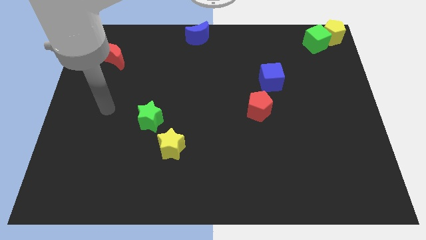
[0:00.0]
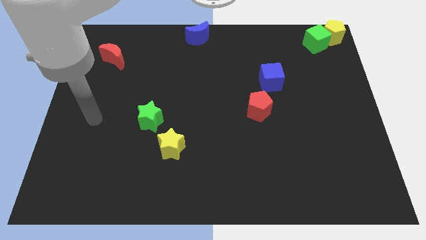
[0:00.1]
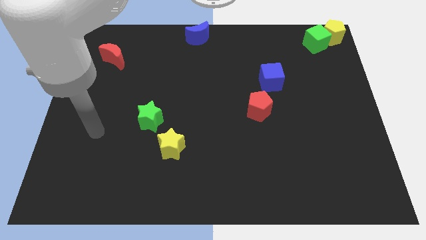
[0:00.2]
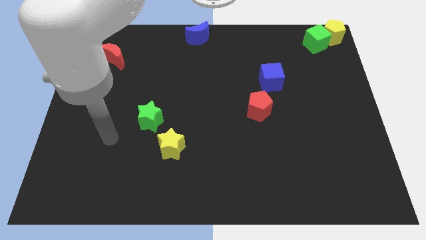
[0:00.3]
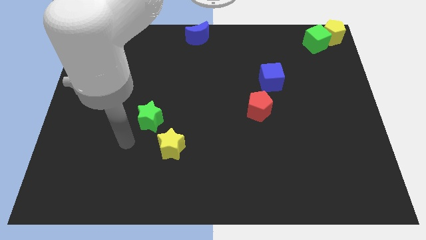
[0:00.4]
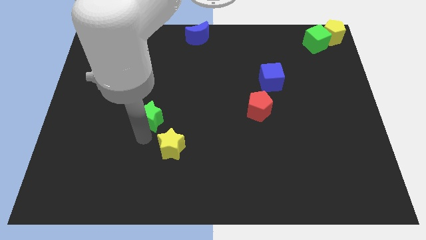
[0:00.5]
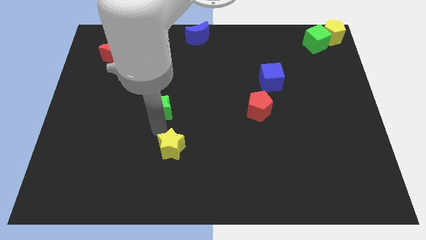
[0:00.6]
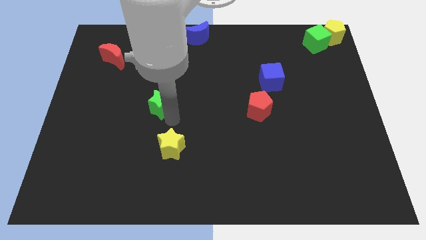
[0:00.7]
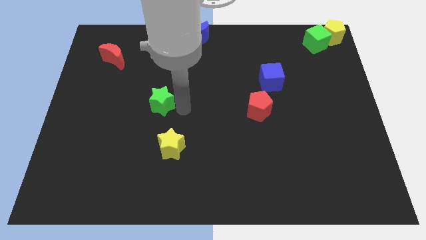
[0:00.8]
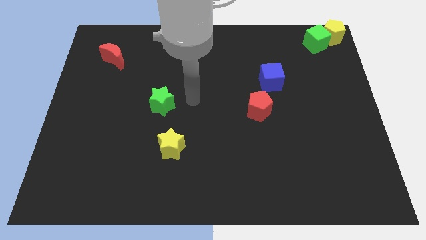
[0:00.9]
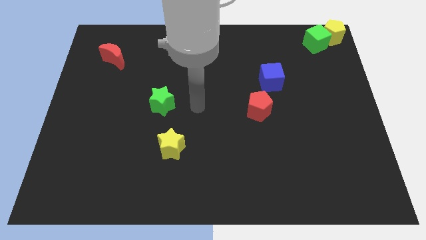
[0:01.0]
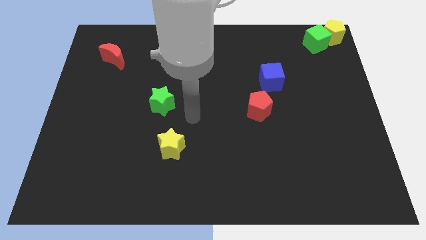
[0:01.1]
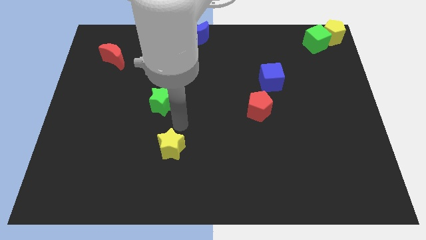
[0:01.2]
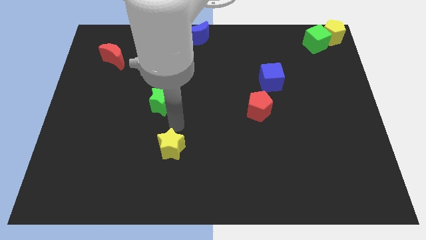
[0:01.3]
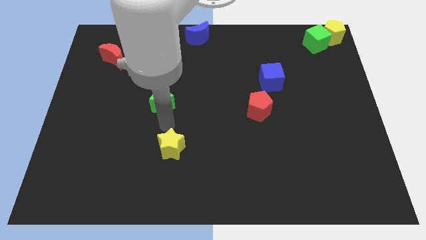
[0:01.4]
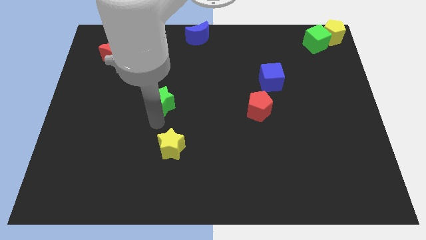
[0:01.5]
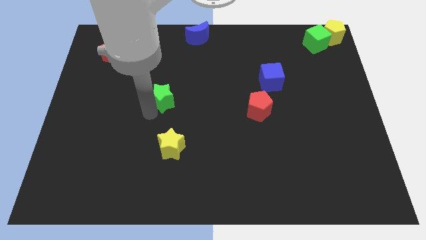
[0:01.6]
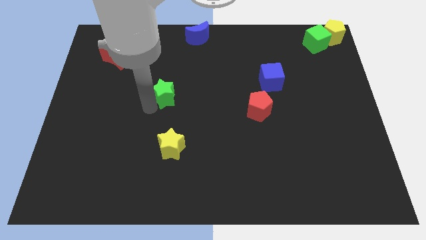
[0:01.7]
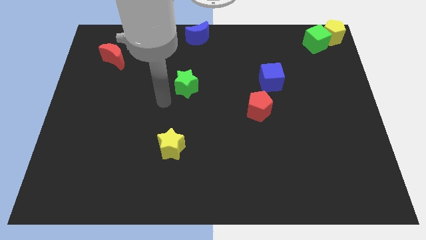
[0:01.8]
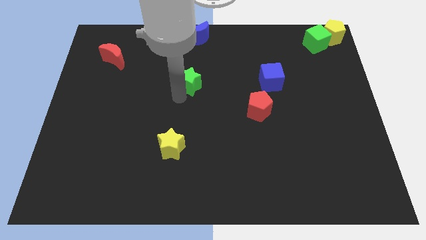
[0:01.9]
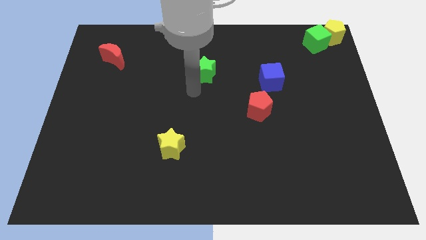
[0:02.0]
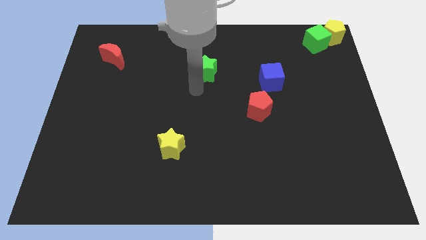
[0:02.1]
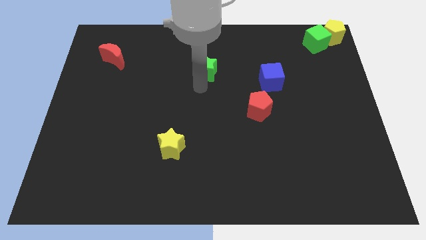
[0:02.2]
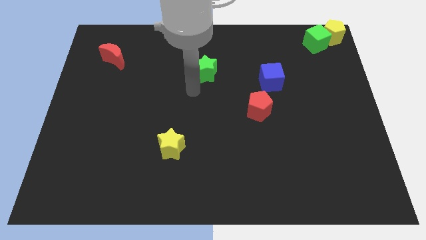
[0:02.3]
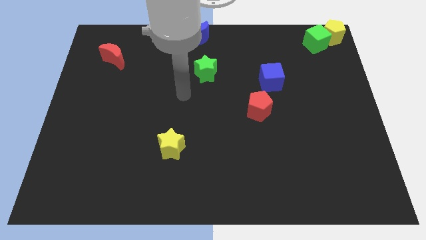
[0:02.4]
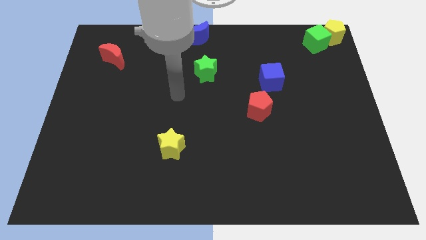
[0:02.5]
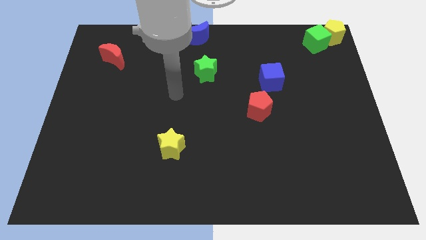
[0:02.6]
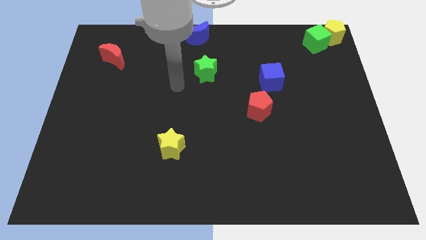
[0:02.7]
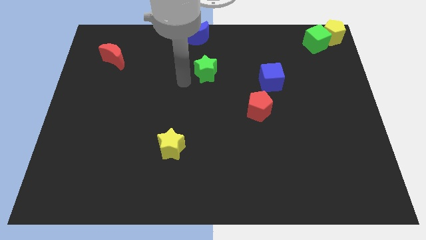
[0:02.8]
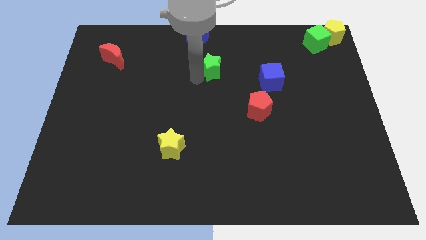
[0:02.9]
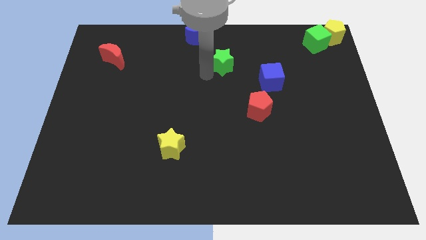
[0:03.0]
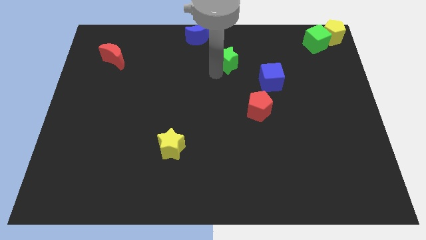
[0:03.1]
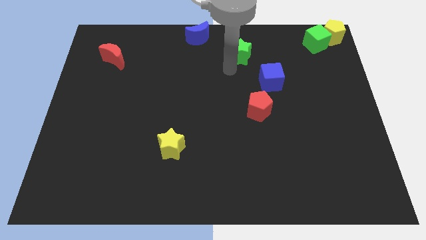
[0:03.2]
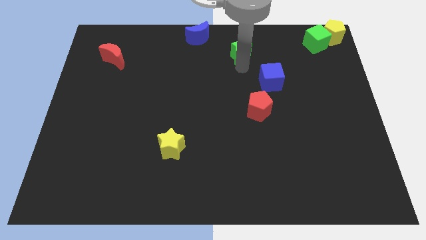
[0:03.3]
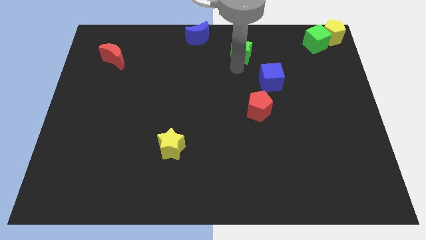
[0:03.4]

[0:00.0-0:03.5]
place the green star in between the blue moon and blue cube

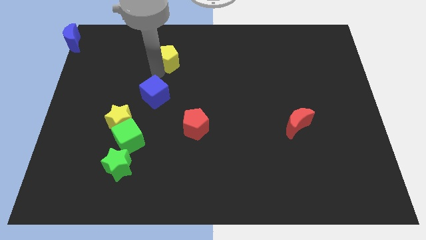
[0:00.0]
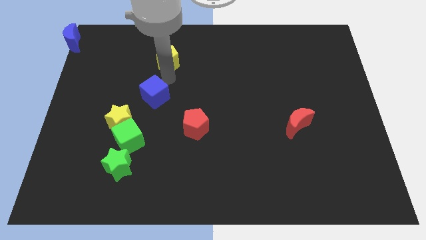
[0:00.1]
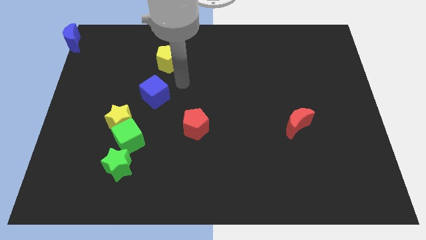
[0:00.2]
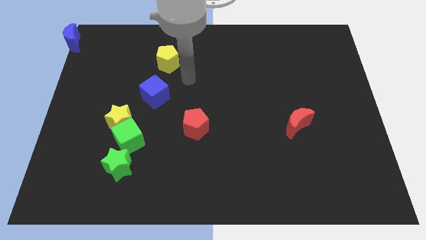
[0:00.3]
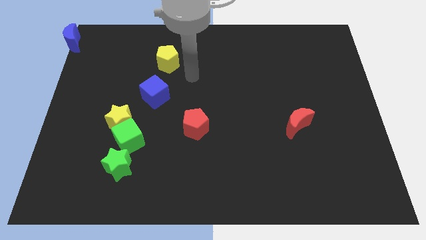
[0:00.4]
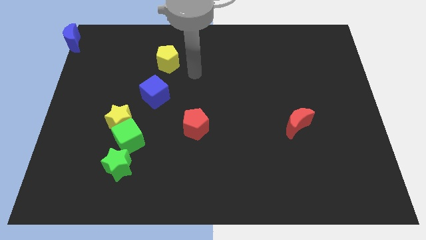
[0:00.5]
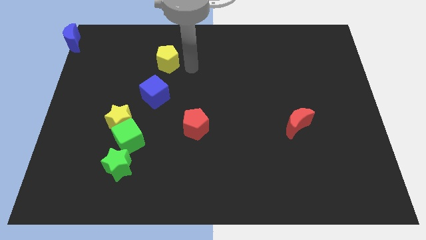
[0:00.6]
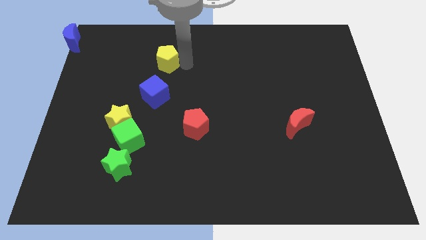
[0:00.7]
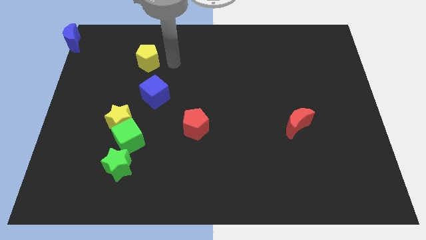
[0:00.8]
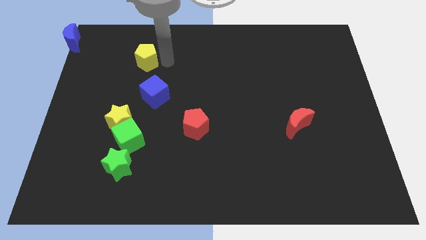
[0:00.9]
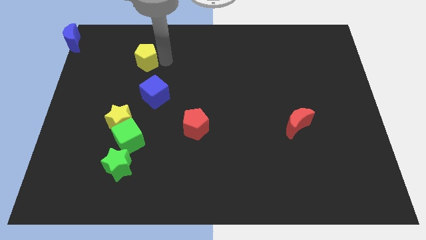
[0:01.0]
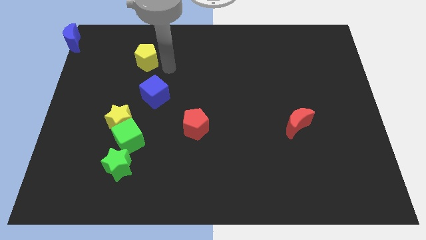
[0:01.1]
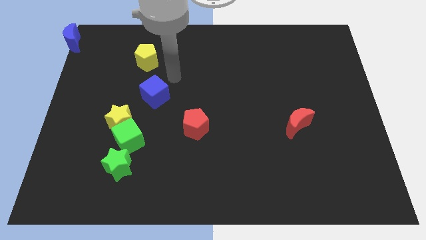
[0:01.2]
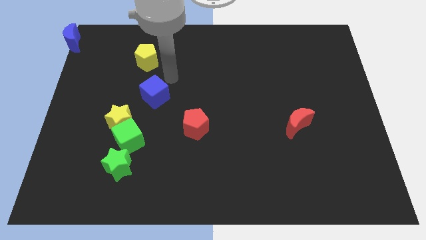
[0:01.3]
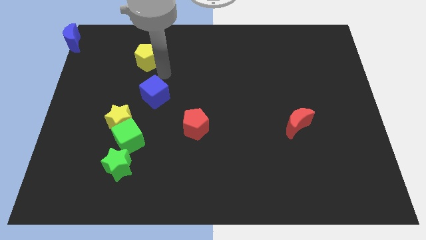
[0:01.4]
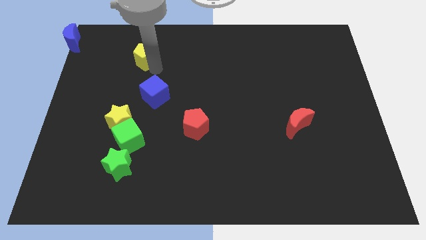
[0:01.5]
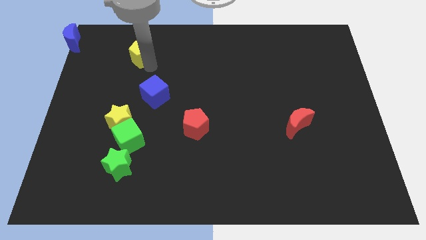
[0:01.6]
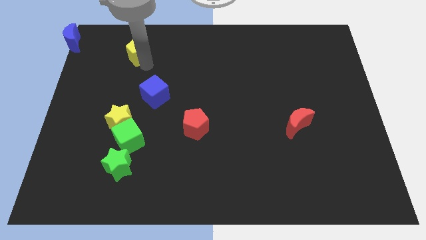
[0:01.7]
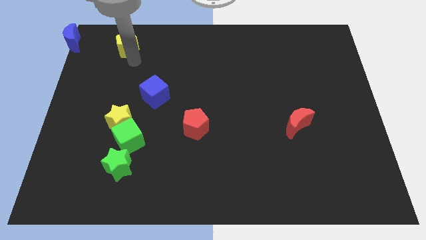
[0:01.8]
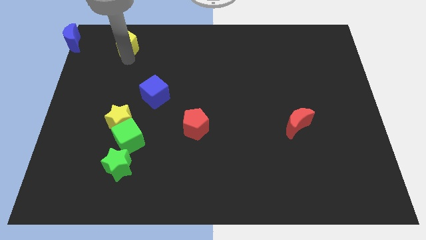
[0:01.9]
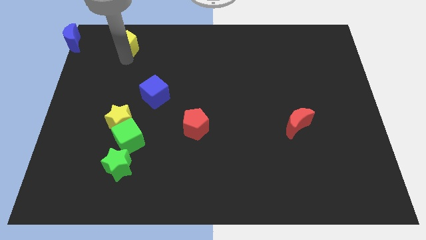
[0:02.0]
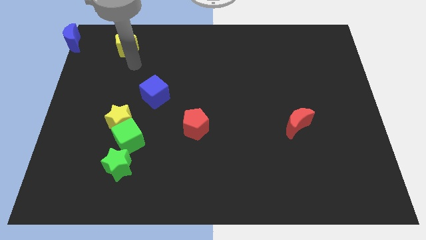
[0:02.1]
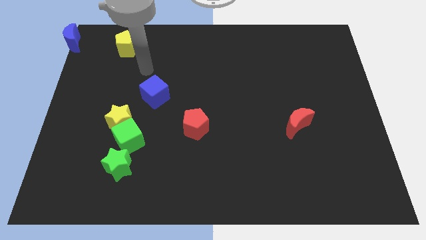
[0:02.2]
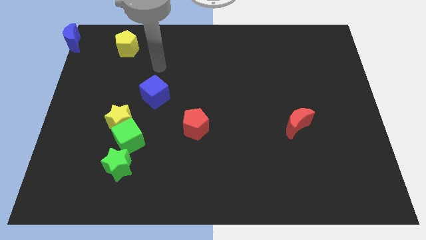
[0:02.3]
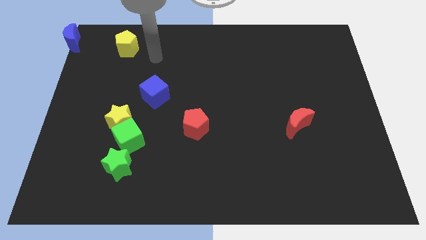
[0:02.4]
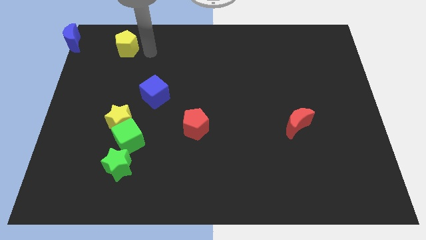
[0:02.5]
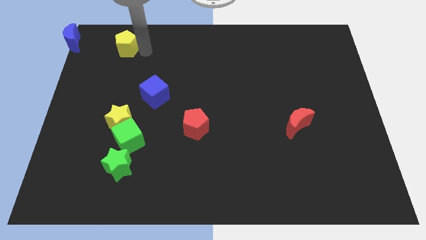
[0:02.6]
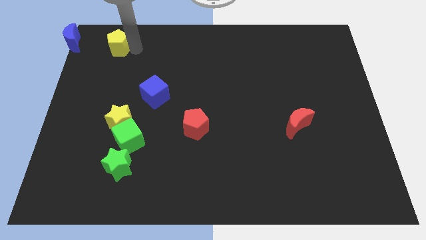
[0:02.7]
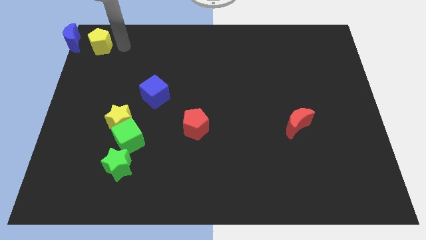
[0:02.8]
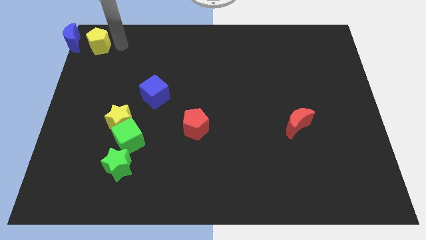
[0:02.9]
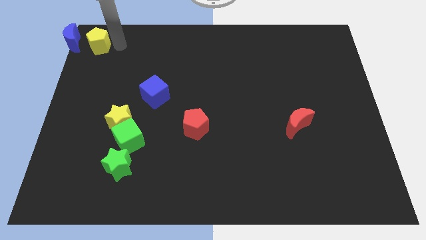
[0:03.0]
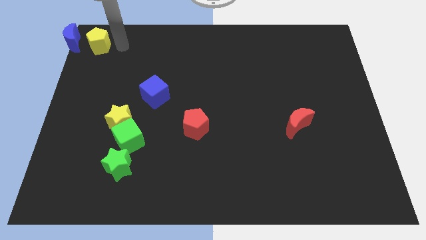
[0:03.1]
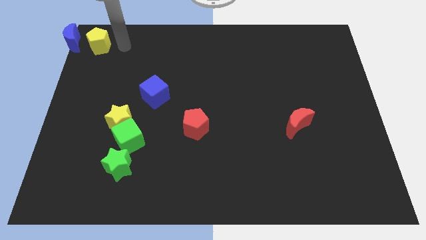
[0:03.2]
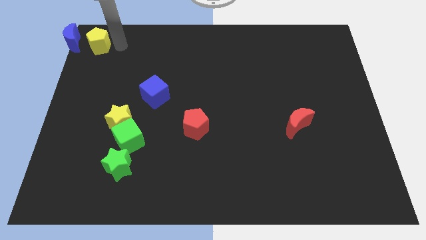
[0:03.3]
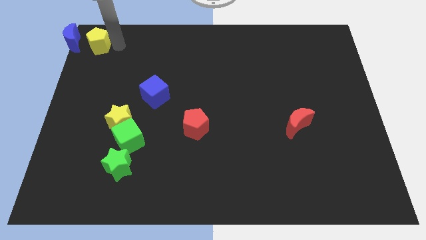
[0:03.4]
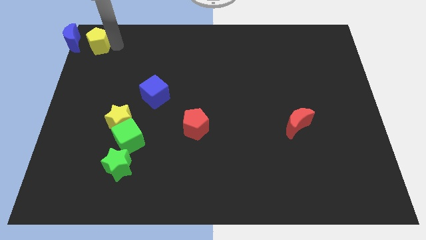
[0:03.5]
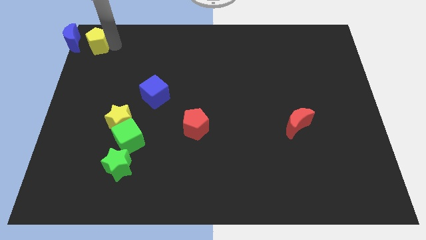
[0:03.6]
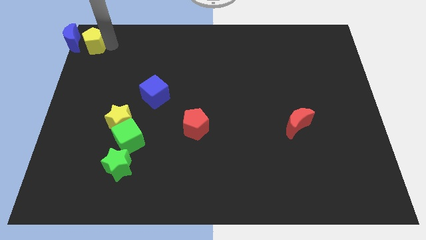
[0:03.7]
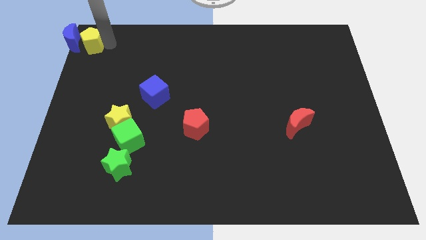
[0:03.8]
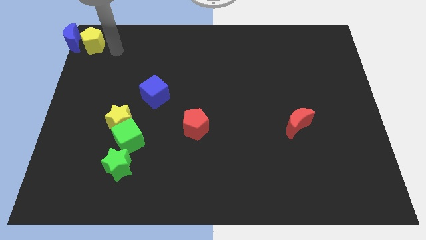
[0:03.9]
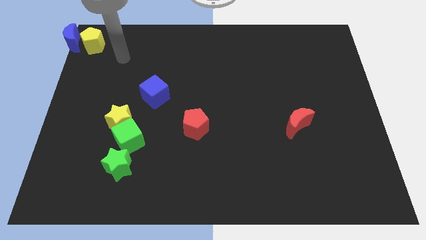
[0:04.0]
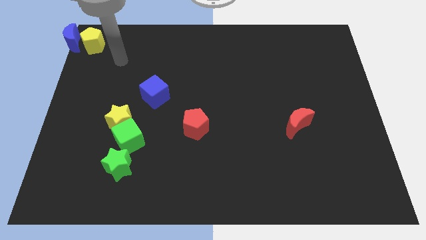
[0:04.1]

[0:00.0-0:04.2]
push the yellow pentagon towards the top left corner of the board

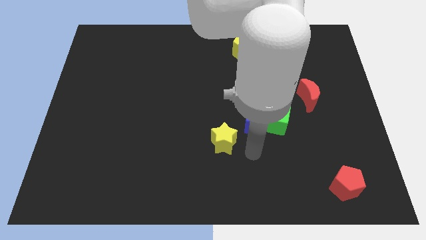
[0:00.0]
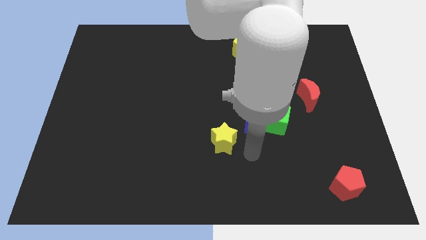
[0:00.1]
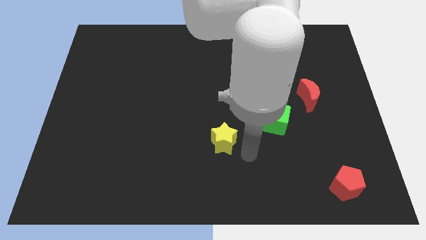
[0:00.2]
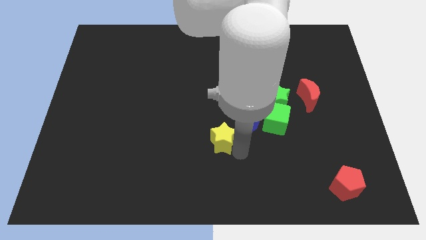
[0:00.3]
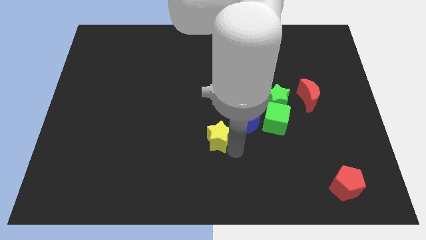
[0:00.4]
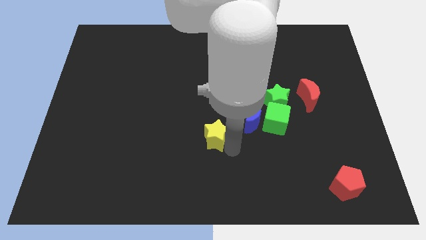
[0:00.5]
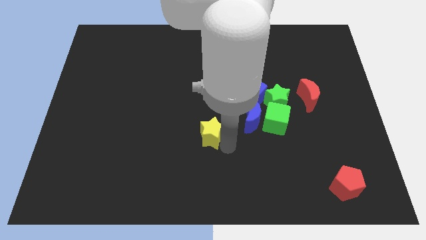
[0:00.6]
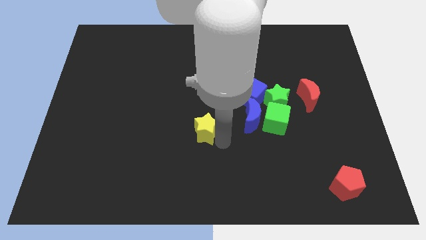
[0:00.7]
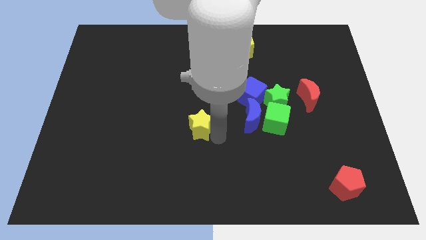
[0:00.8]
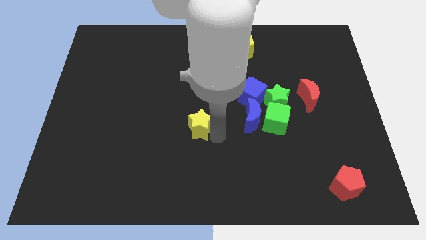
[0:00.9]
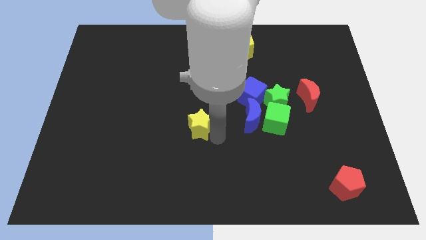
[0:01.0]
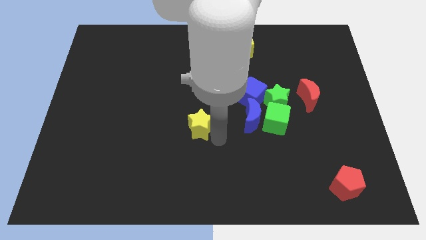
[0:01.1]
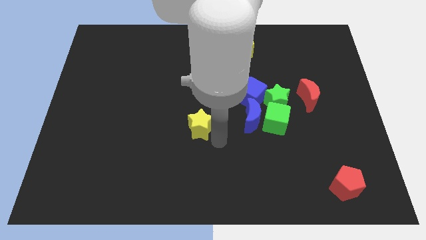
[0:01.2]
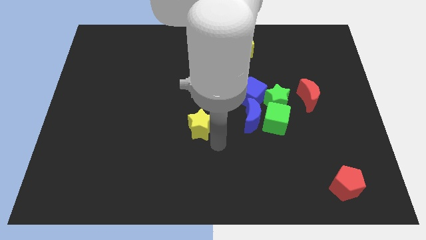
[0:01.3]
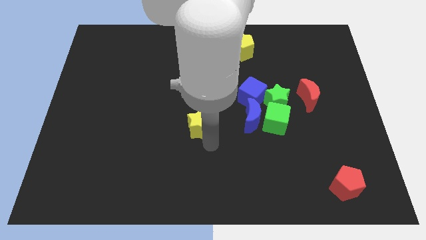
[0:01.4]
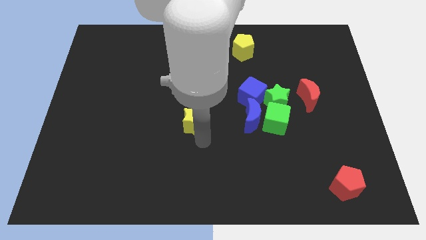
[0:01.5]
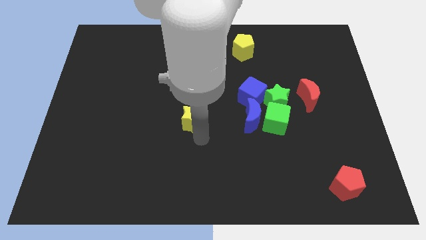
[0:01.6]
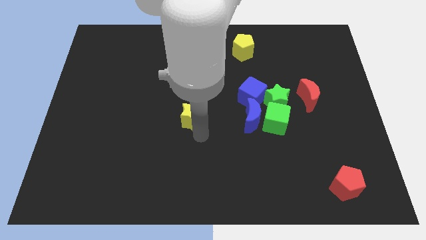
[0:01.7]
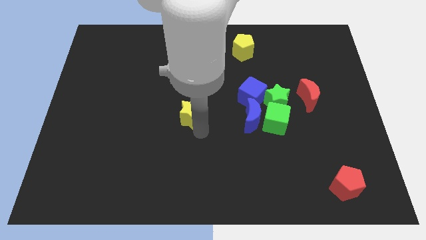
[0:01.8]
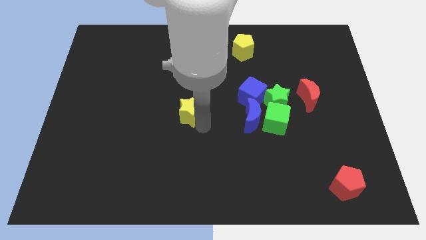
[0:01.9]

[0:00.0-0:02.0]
push the yellow star to the left of the blue crescent
